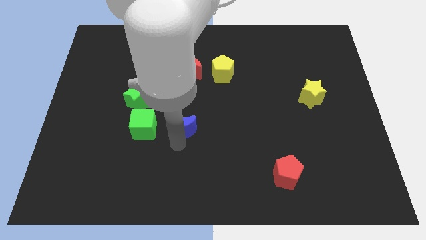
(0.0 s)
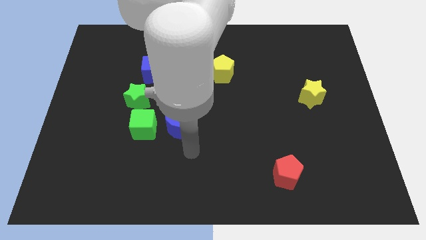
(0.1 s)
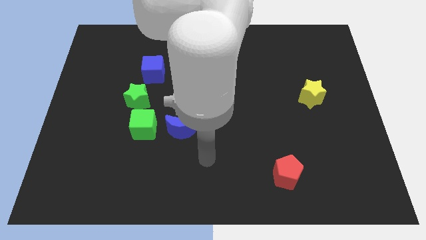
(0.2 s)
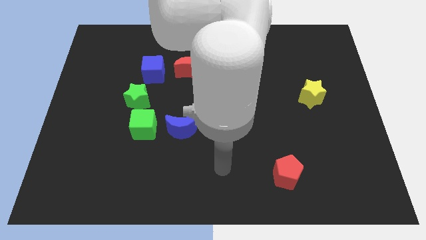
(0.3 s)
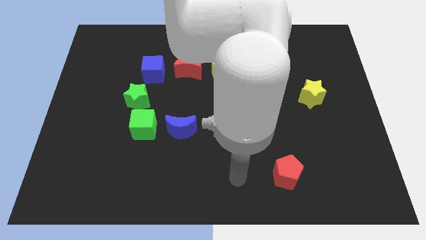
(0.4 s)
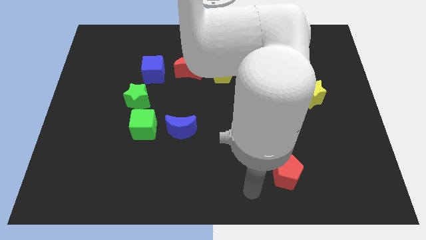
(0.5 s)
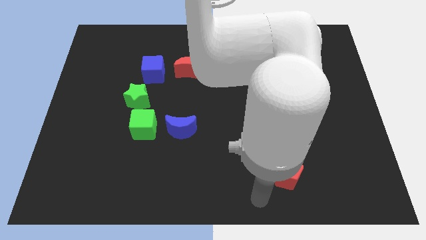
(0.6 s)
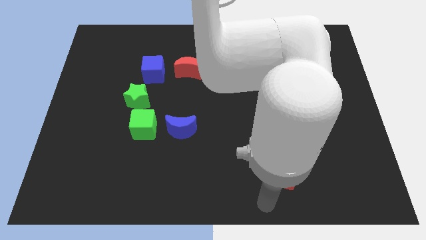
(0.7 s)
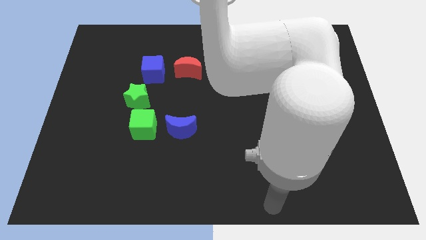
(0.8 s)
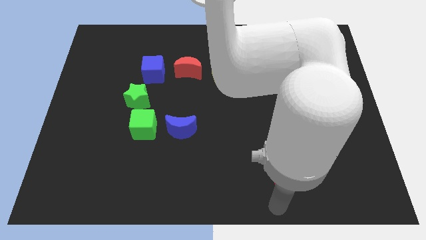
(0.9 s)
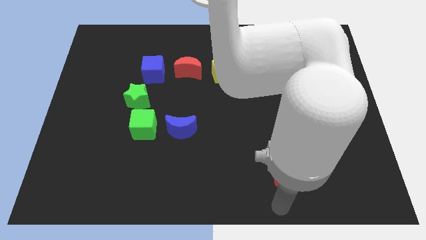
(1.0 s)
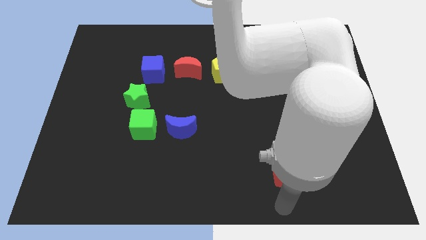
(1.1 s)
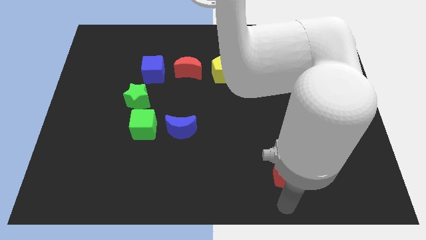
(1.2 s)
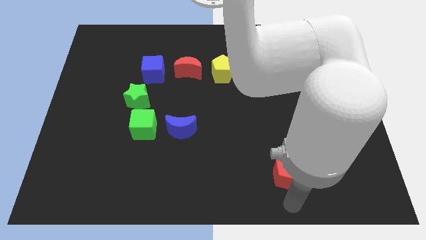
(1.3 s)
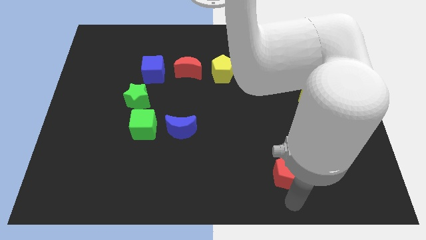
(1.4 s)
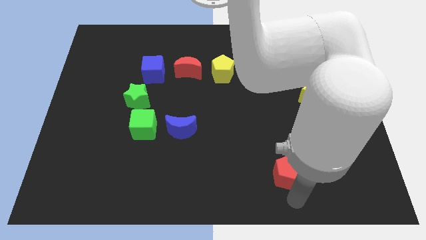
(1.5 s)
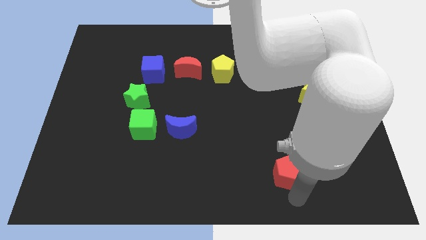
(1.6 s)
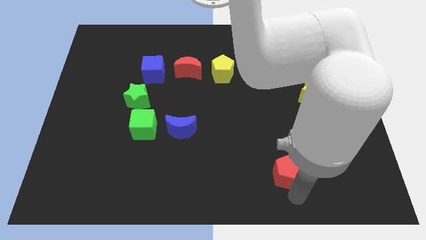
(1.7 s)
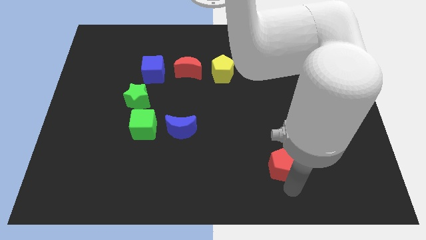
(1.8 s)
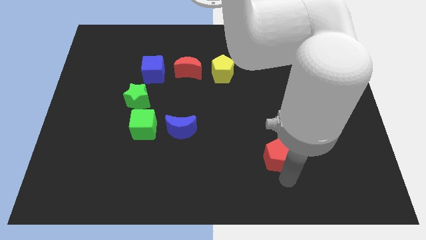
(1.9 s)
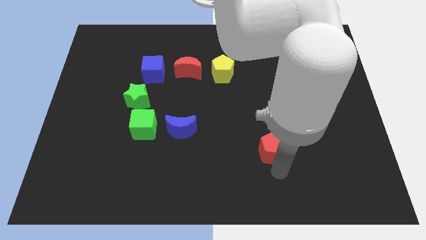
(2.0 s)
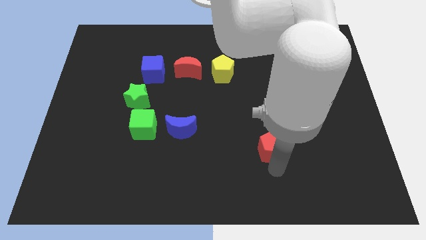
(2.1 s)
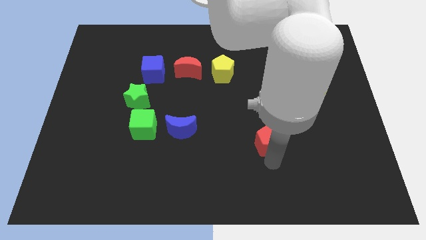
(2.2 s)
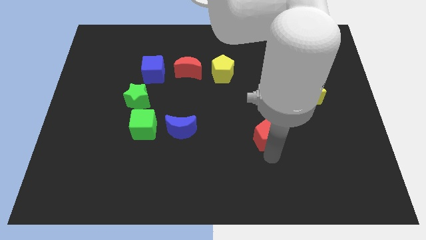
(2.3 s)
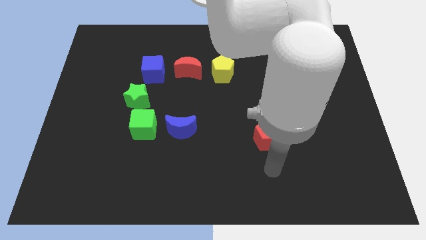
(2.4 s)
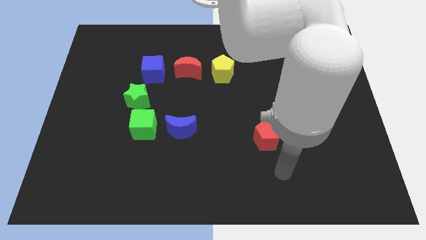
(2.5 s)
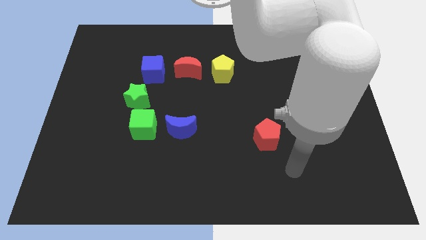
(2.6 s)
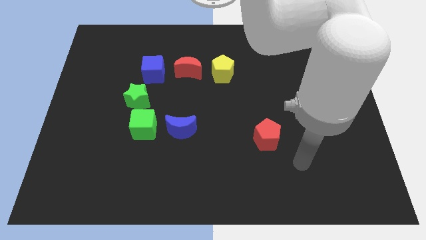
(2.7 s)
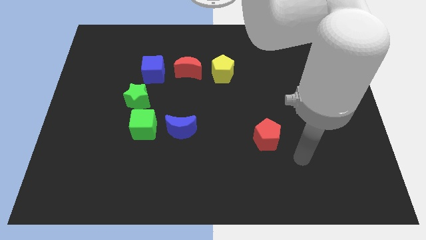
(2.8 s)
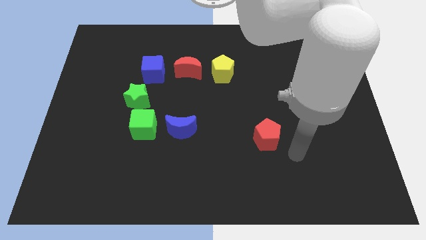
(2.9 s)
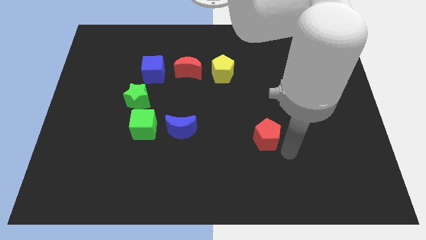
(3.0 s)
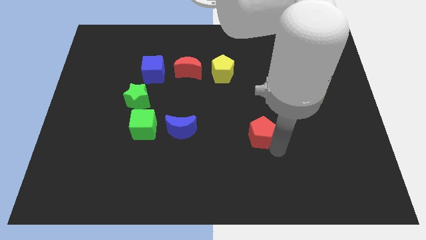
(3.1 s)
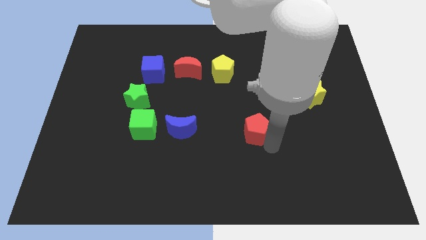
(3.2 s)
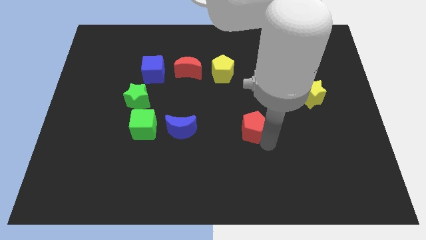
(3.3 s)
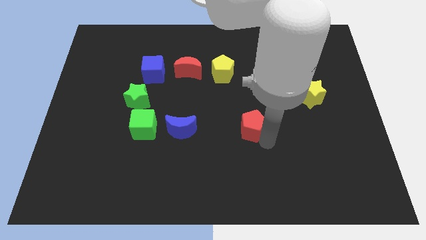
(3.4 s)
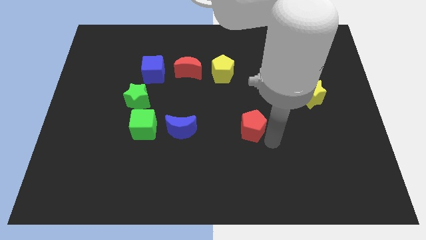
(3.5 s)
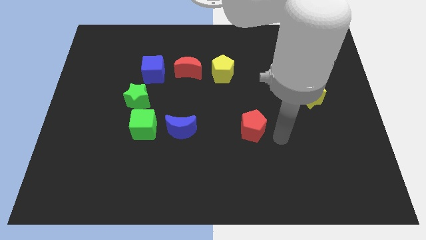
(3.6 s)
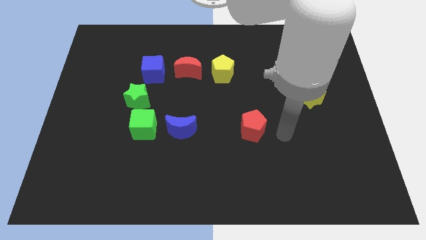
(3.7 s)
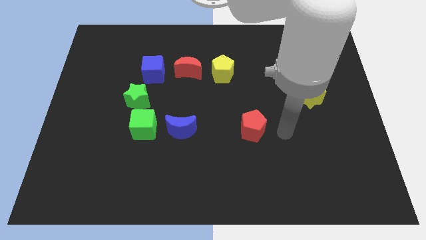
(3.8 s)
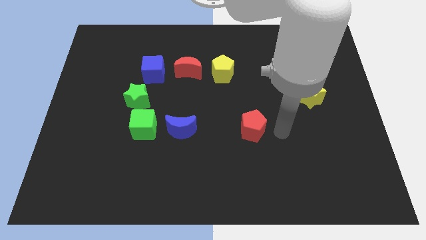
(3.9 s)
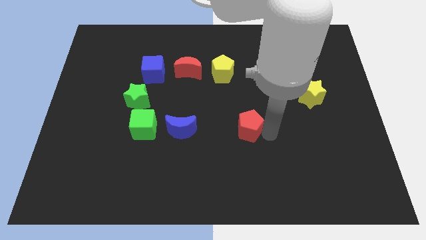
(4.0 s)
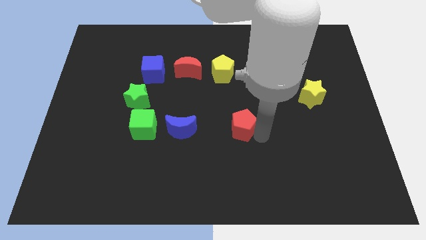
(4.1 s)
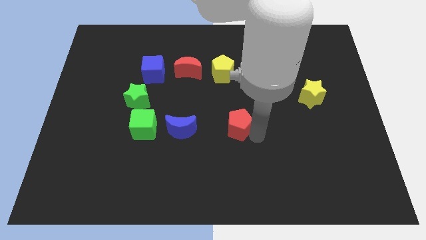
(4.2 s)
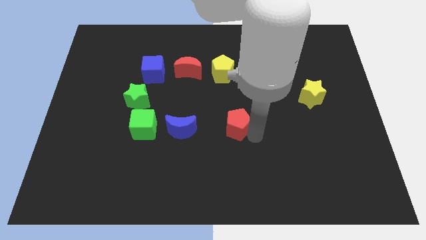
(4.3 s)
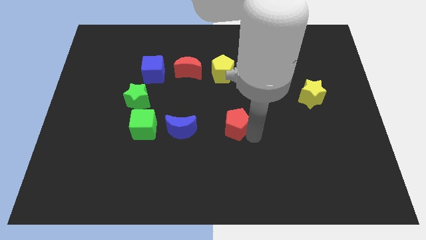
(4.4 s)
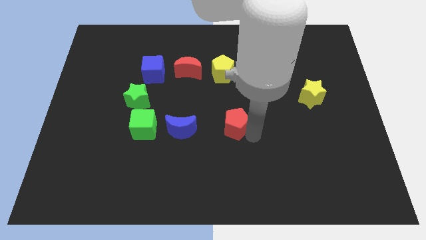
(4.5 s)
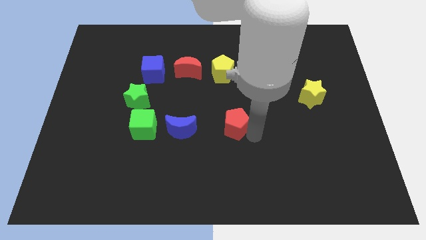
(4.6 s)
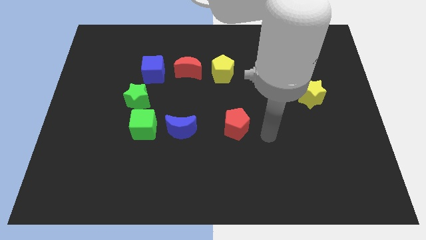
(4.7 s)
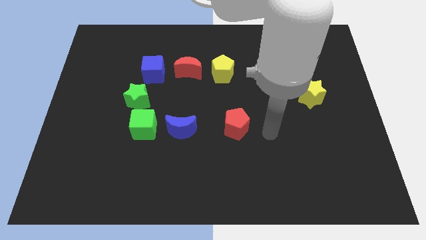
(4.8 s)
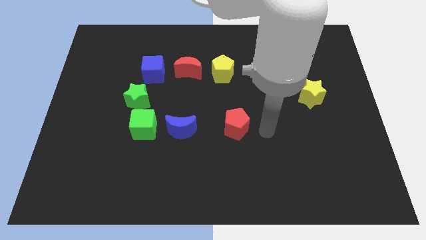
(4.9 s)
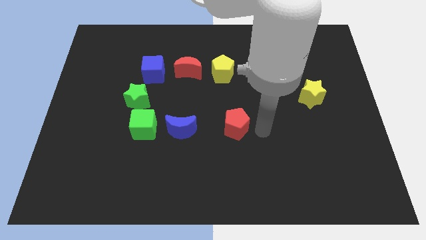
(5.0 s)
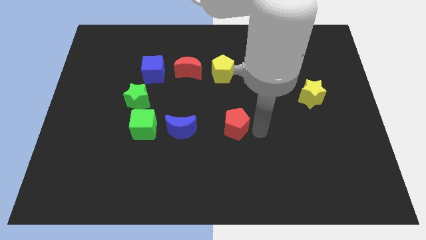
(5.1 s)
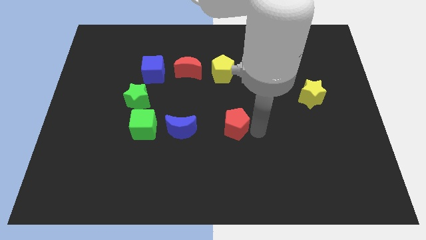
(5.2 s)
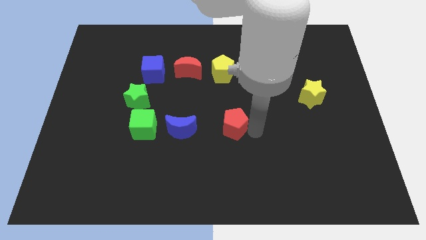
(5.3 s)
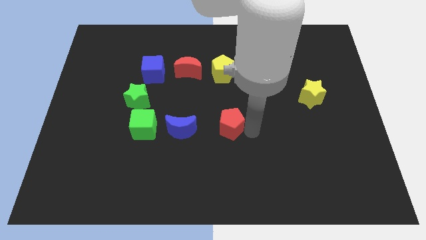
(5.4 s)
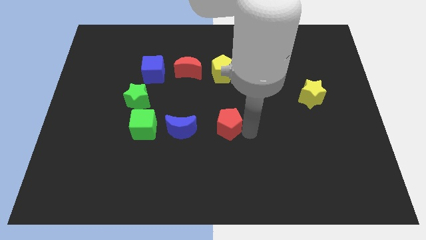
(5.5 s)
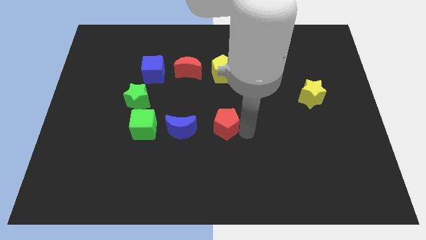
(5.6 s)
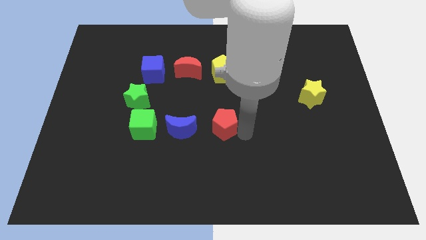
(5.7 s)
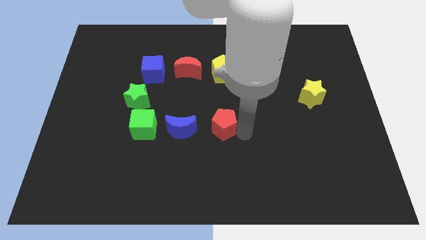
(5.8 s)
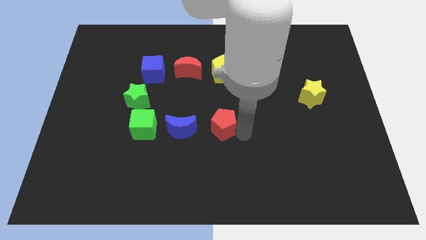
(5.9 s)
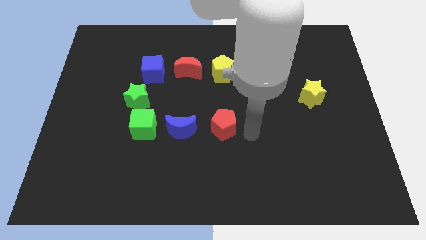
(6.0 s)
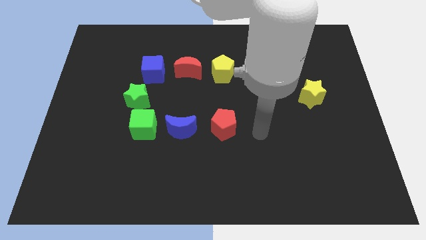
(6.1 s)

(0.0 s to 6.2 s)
move the red pentagon right beside the blue moon

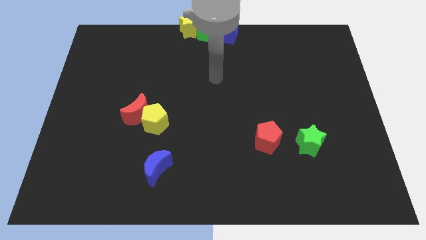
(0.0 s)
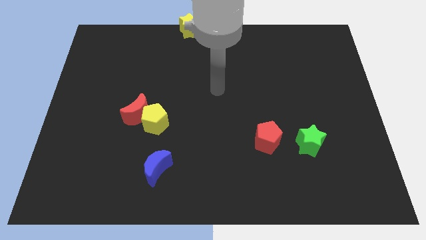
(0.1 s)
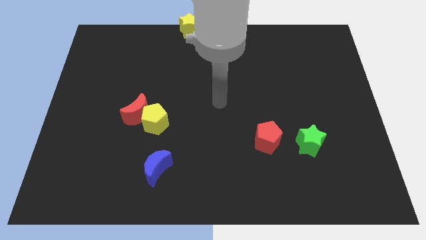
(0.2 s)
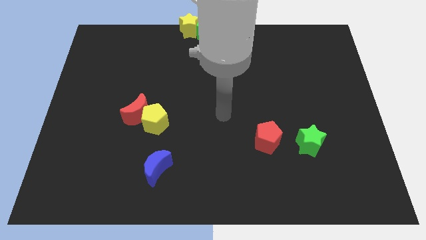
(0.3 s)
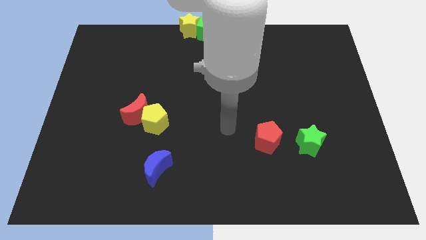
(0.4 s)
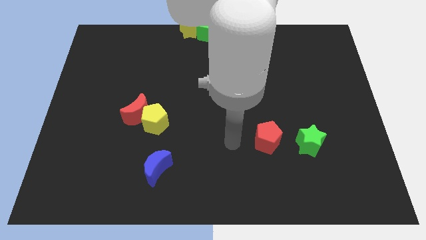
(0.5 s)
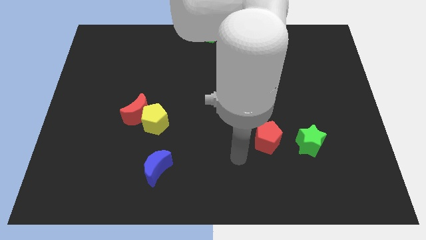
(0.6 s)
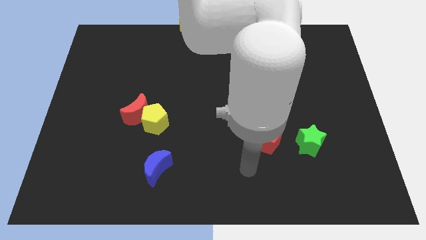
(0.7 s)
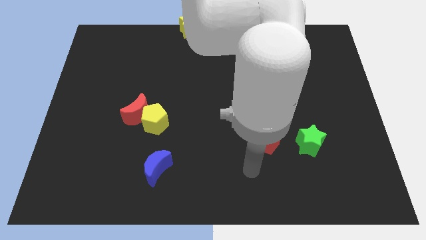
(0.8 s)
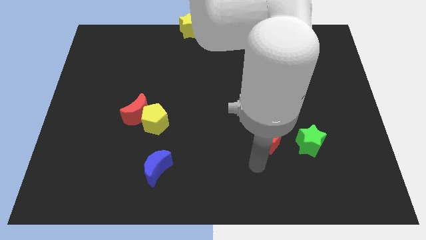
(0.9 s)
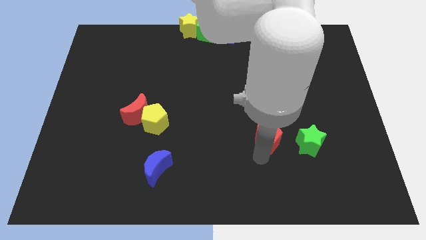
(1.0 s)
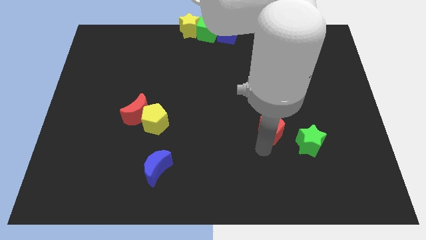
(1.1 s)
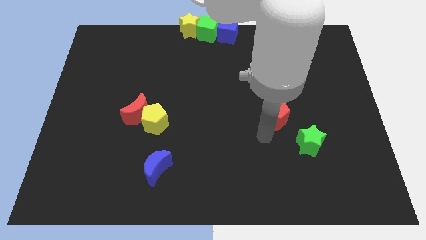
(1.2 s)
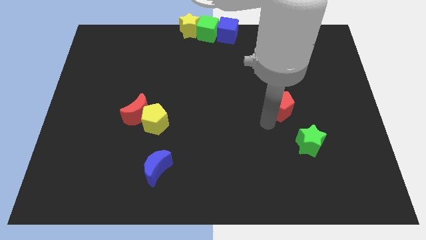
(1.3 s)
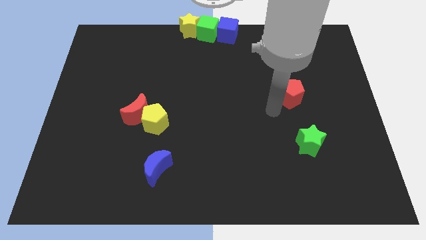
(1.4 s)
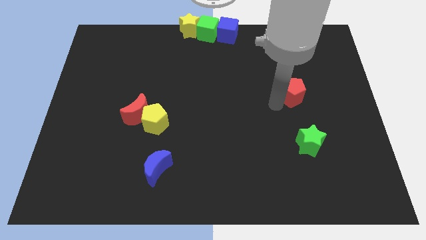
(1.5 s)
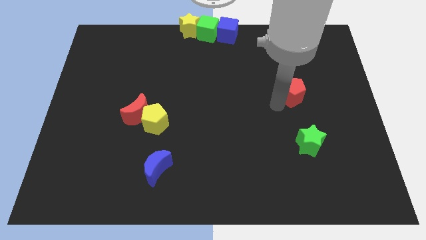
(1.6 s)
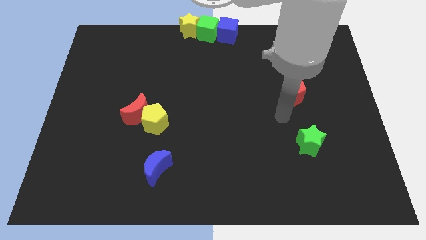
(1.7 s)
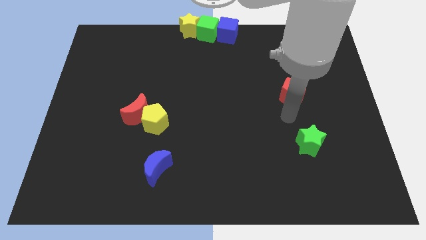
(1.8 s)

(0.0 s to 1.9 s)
push the red pentagon to the top of the board

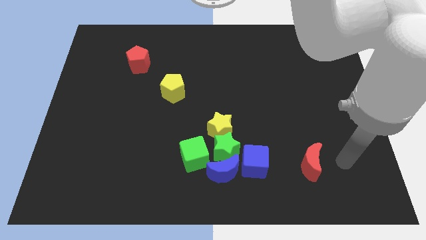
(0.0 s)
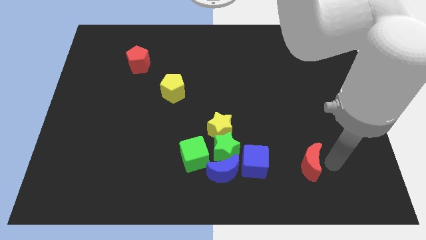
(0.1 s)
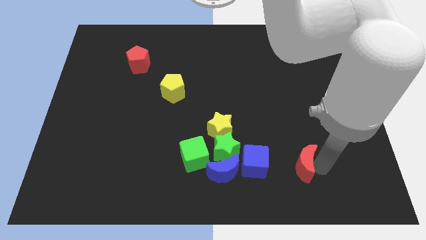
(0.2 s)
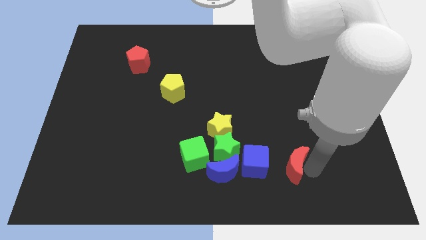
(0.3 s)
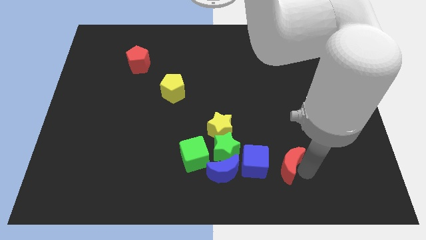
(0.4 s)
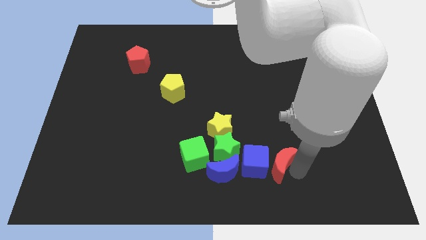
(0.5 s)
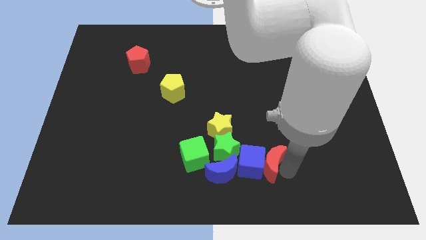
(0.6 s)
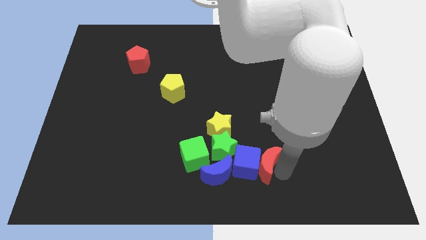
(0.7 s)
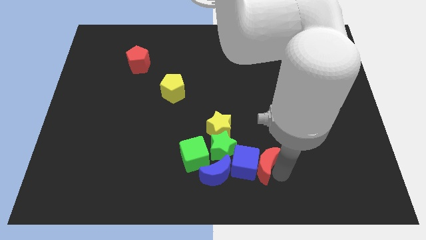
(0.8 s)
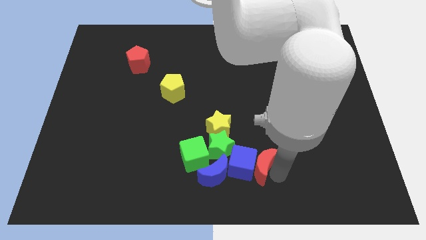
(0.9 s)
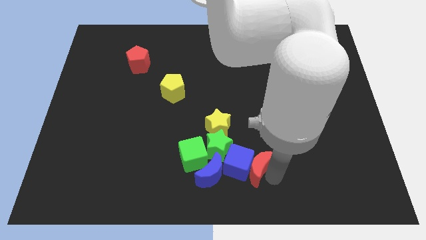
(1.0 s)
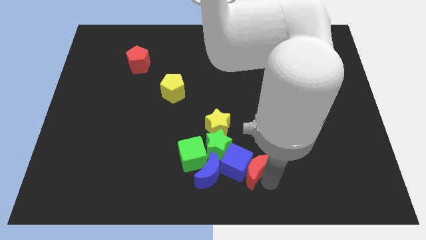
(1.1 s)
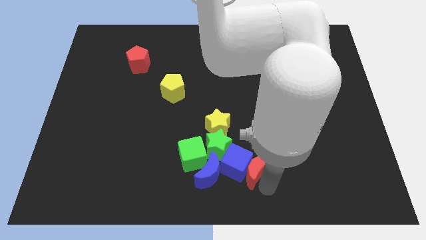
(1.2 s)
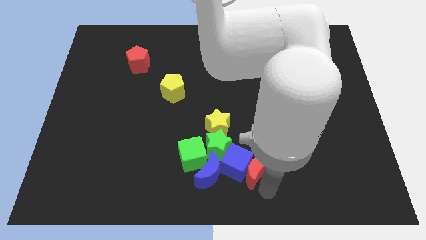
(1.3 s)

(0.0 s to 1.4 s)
move red moon into blue cube
